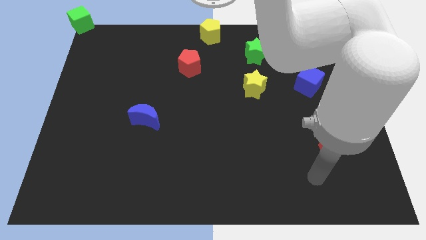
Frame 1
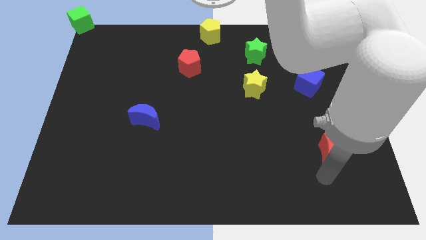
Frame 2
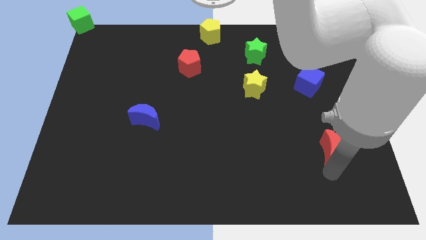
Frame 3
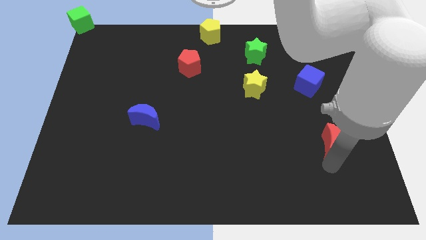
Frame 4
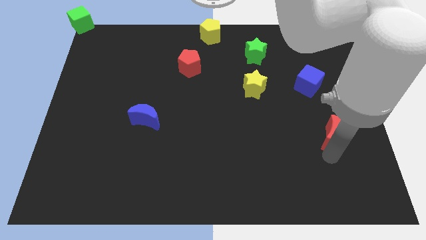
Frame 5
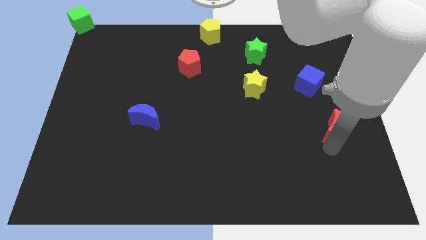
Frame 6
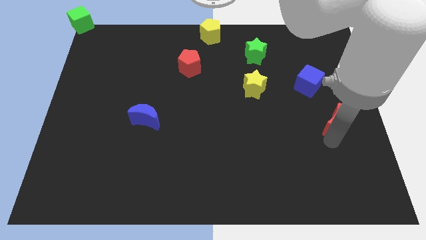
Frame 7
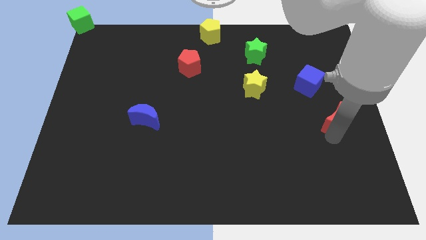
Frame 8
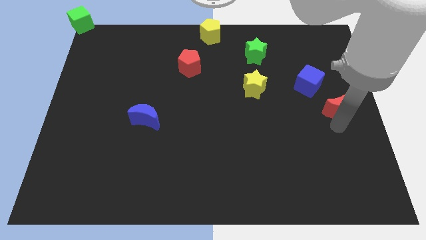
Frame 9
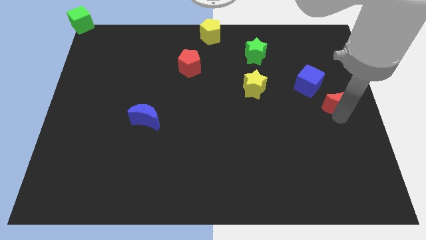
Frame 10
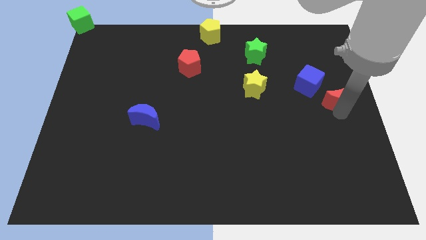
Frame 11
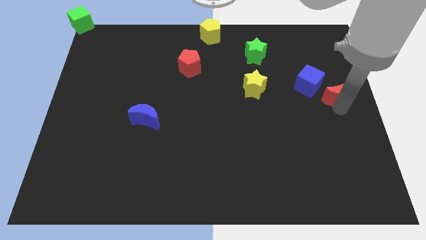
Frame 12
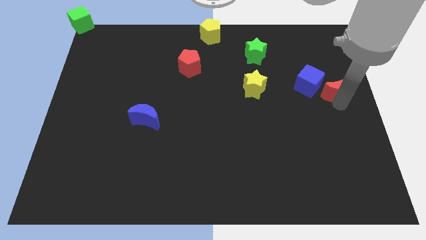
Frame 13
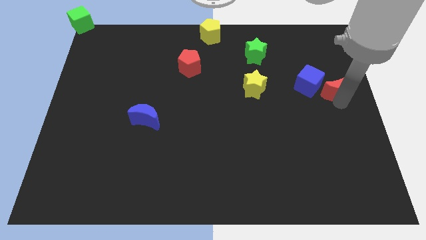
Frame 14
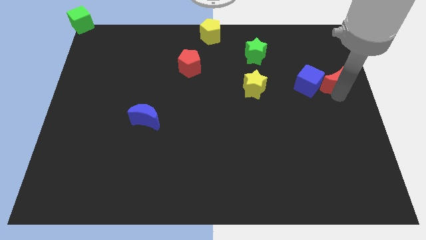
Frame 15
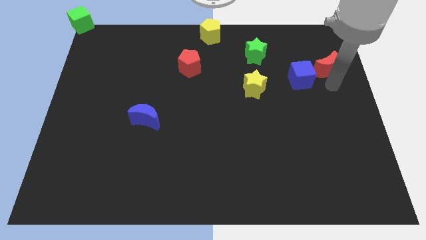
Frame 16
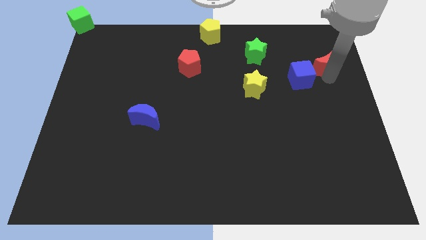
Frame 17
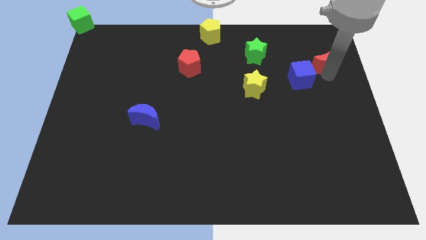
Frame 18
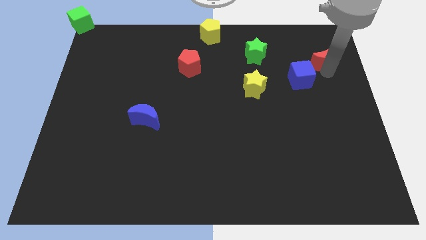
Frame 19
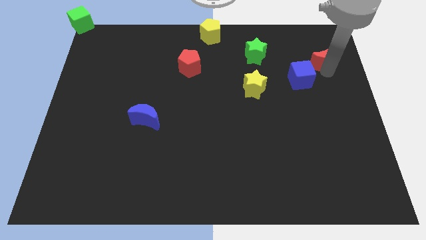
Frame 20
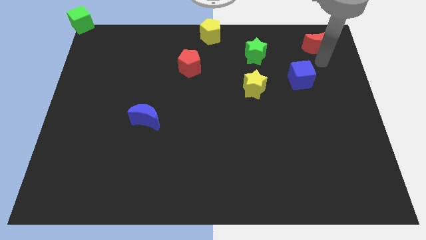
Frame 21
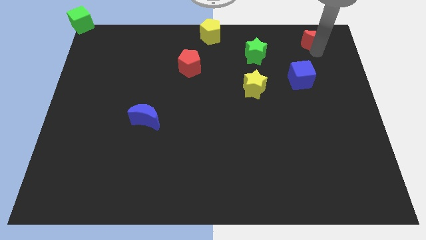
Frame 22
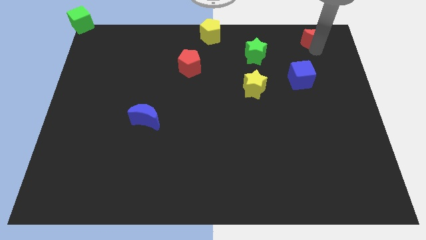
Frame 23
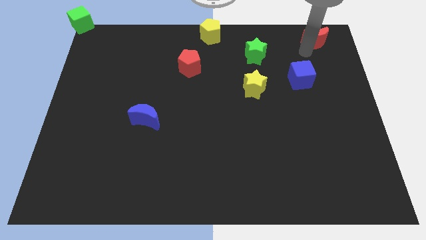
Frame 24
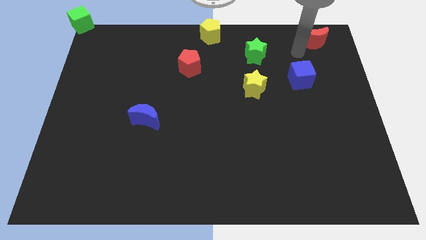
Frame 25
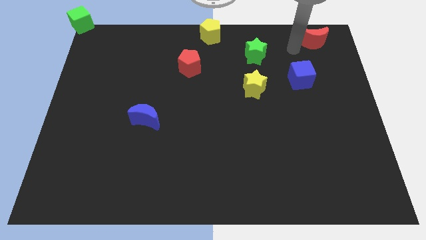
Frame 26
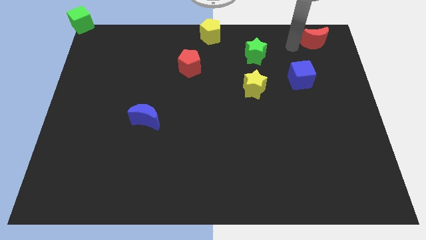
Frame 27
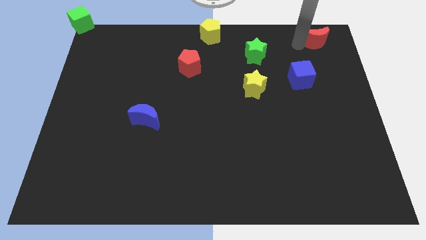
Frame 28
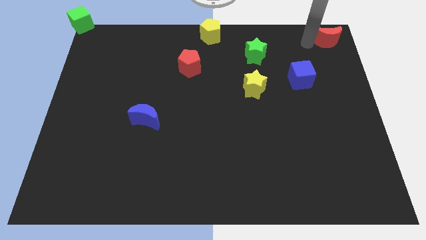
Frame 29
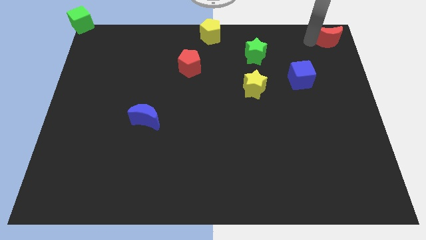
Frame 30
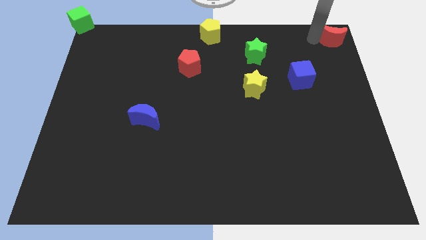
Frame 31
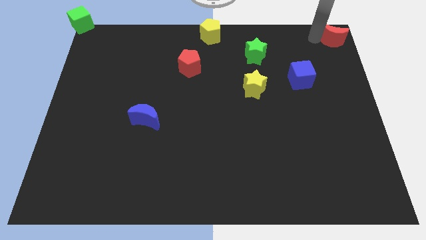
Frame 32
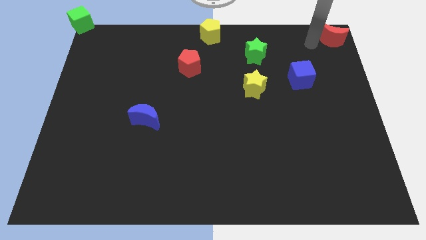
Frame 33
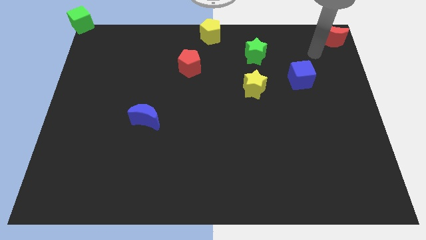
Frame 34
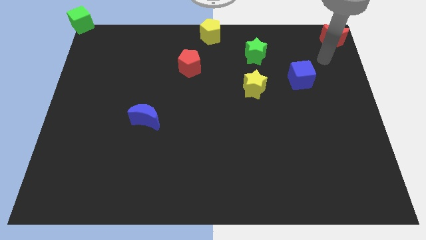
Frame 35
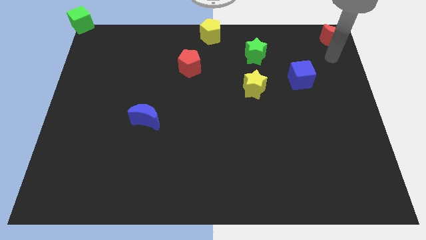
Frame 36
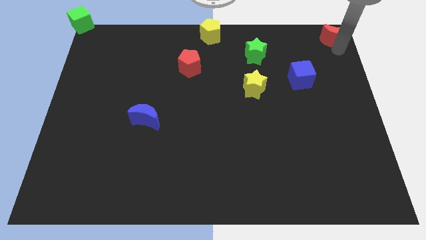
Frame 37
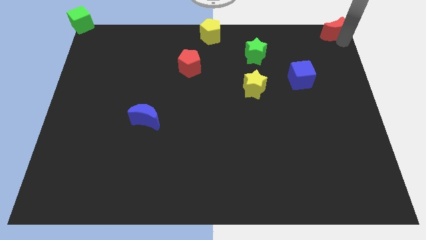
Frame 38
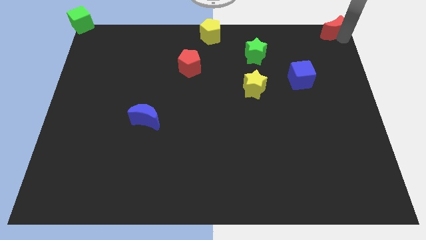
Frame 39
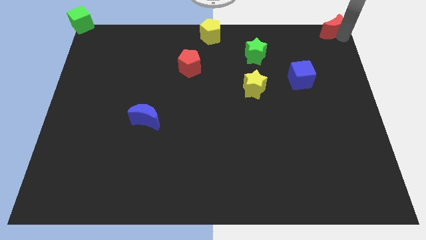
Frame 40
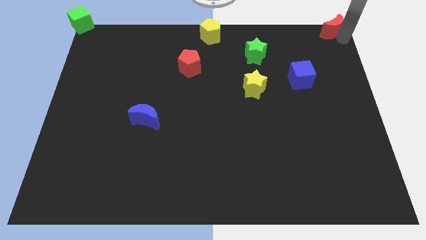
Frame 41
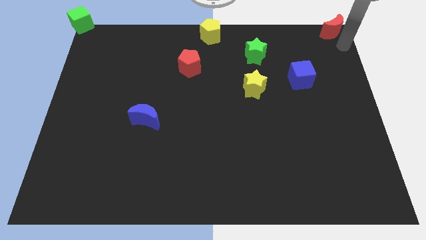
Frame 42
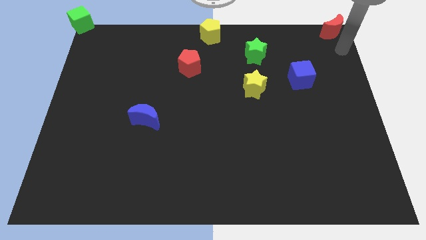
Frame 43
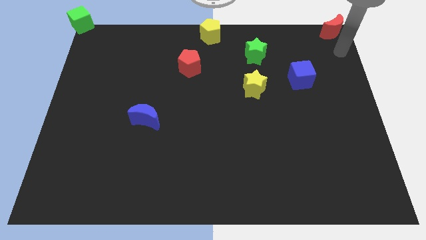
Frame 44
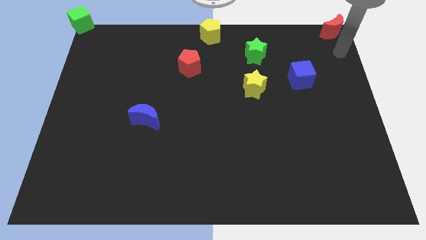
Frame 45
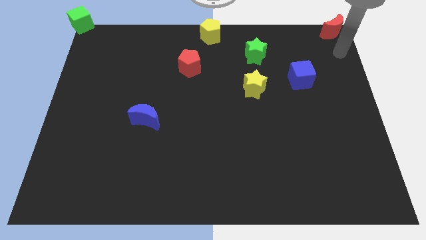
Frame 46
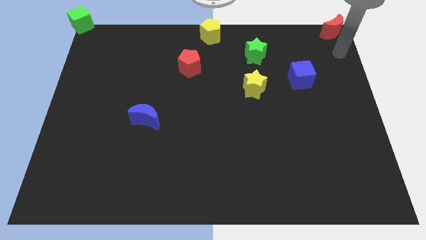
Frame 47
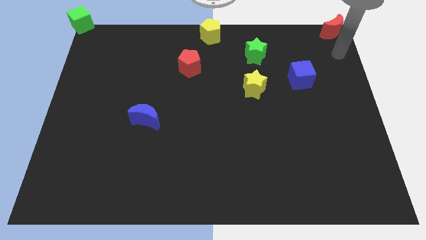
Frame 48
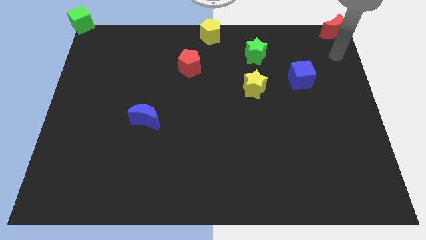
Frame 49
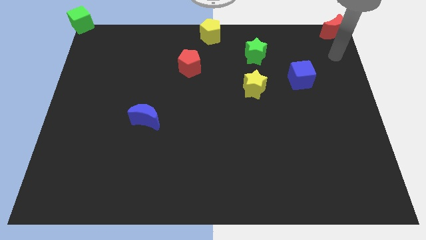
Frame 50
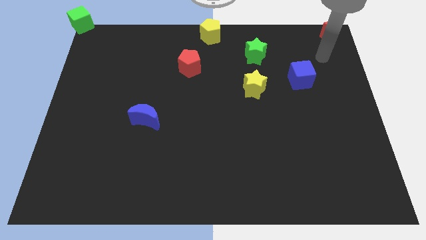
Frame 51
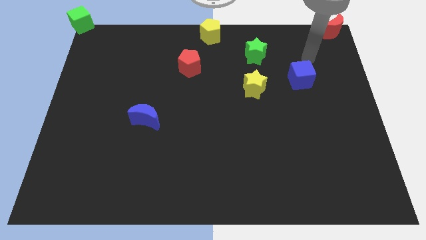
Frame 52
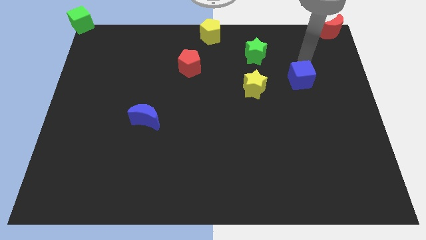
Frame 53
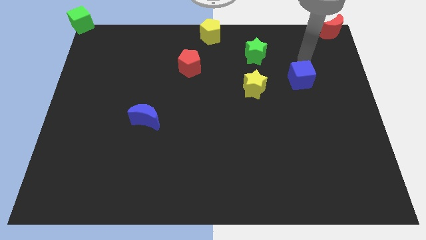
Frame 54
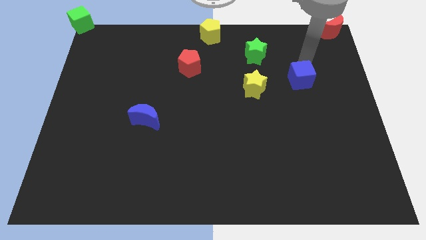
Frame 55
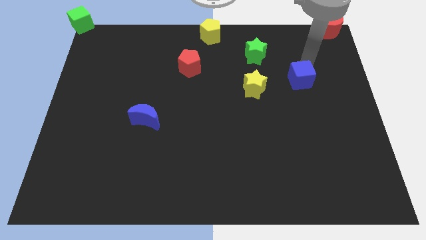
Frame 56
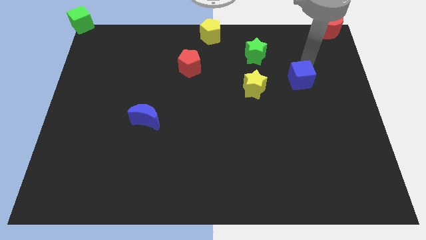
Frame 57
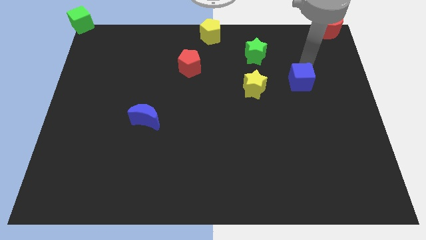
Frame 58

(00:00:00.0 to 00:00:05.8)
put the red moon on the top right of the board

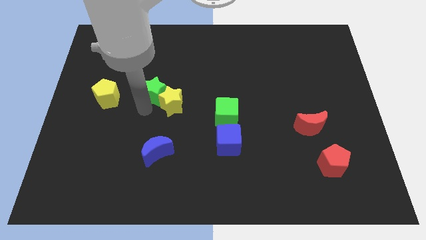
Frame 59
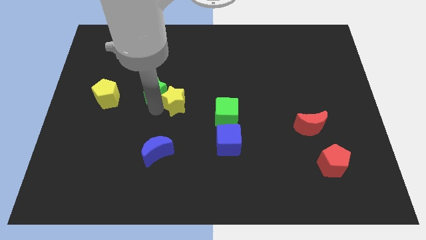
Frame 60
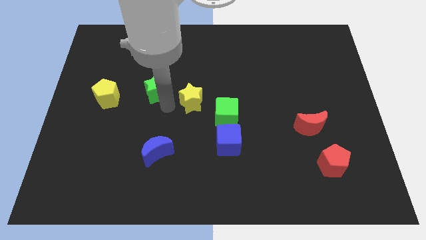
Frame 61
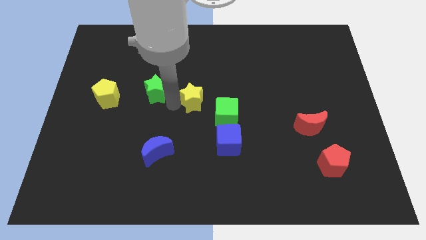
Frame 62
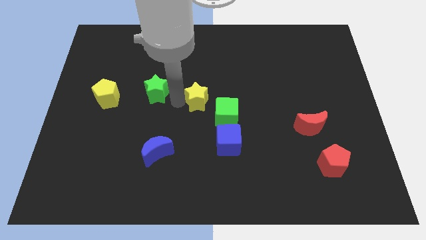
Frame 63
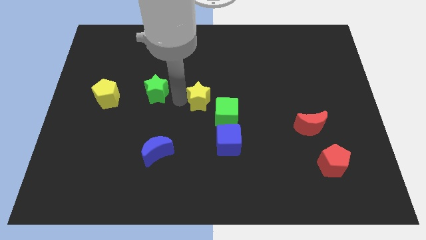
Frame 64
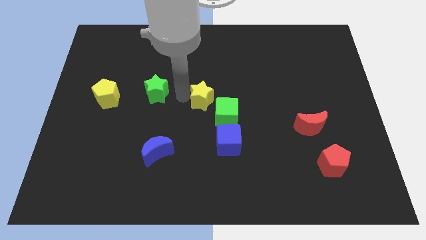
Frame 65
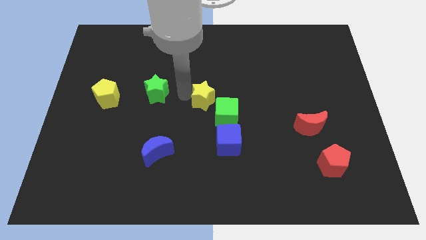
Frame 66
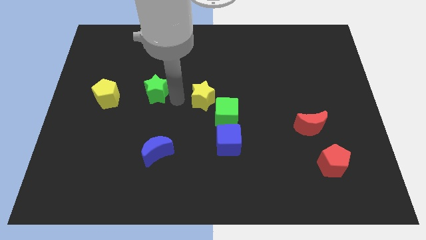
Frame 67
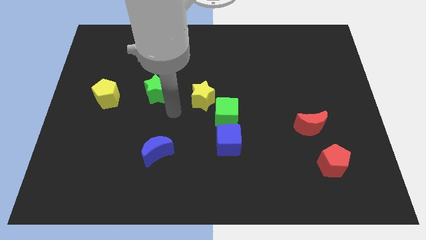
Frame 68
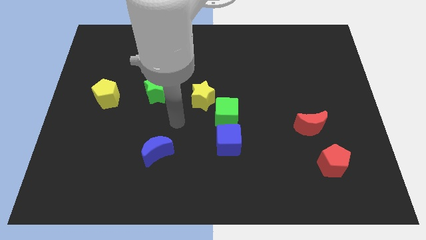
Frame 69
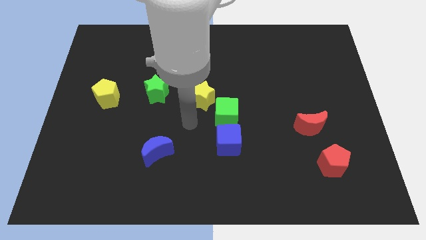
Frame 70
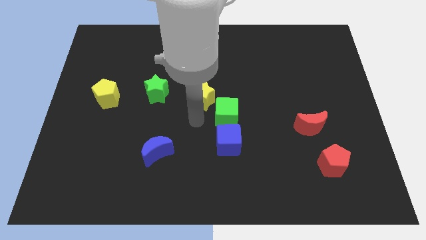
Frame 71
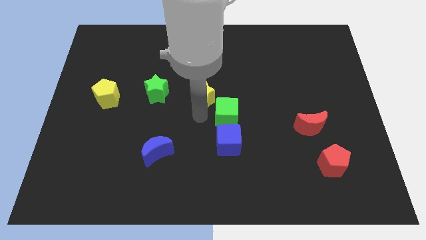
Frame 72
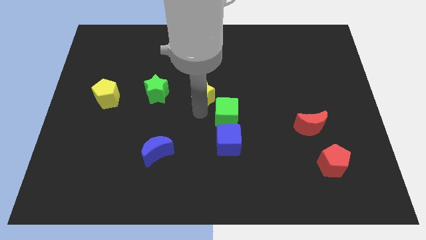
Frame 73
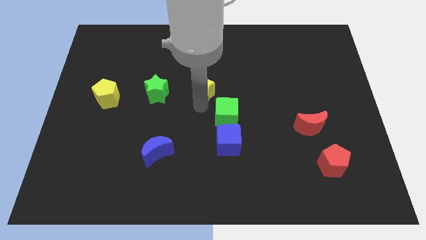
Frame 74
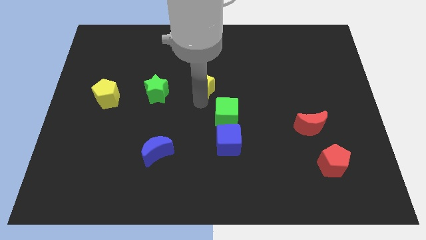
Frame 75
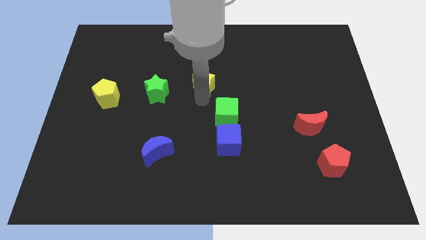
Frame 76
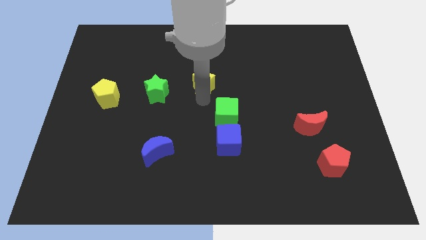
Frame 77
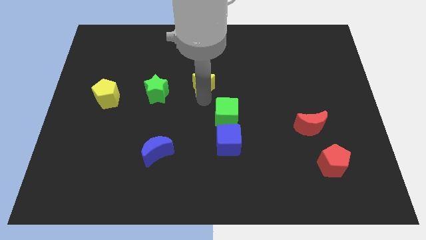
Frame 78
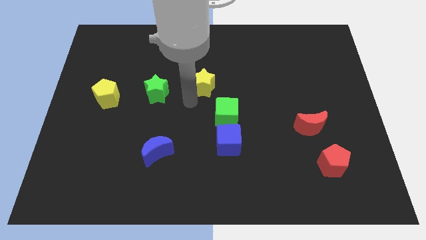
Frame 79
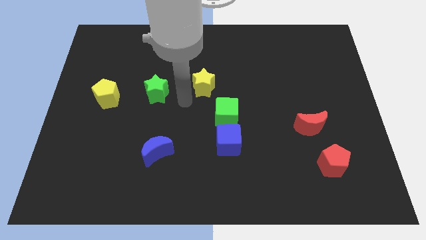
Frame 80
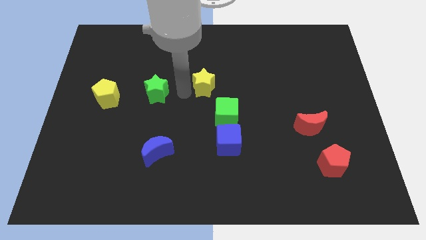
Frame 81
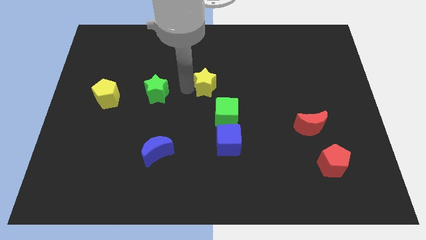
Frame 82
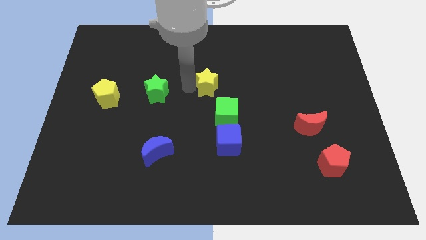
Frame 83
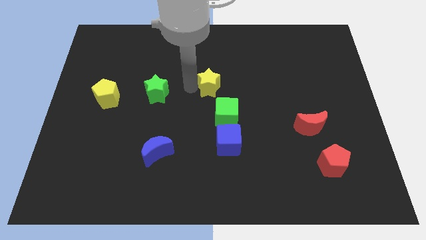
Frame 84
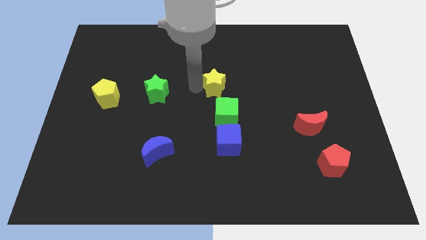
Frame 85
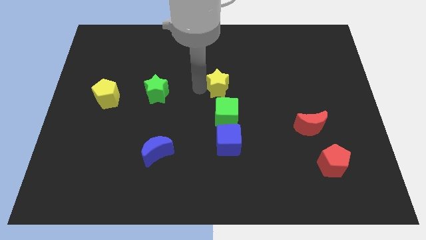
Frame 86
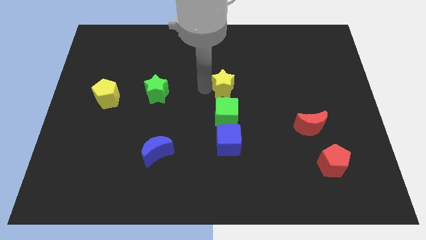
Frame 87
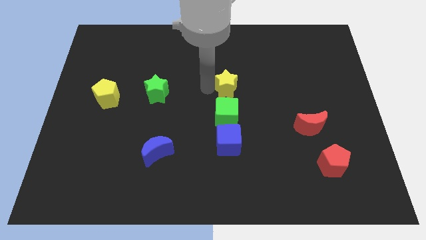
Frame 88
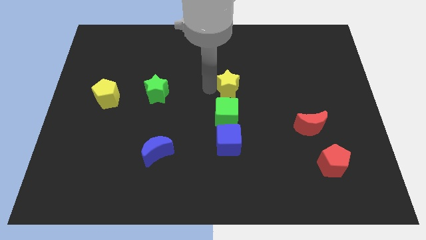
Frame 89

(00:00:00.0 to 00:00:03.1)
place yellow star above green cube
